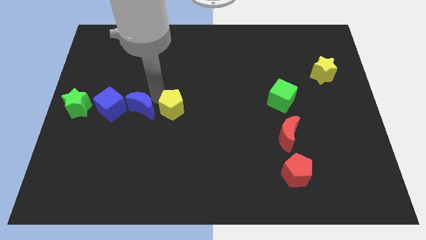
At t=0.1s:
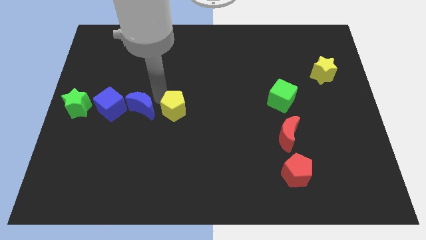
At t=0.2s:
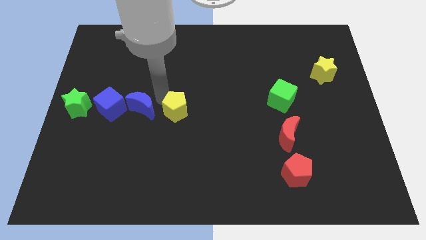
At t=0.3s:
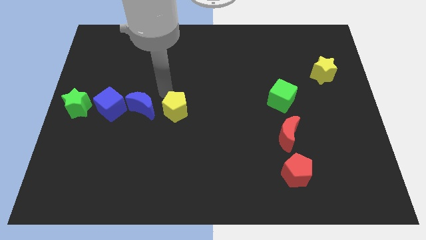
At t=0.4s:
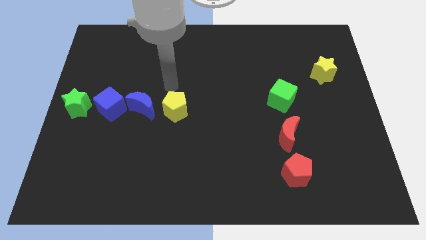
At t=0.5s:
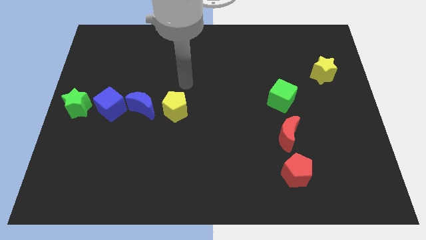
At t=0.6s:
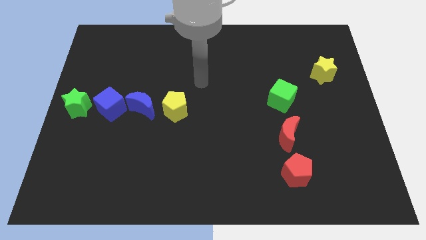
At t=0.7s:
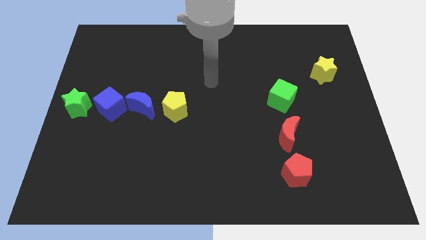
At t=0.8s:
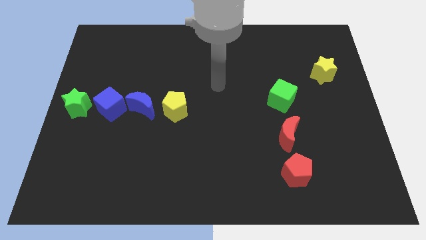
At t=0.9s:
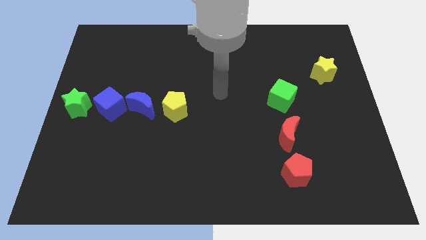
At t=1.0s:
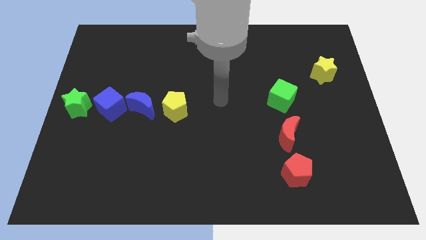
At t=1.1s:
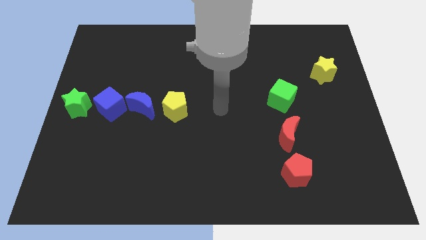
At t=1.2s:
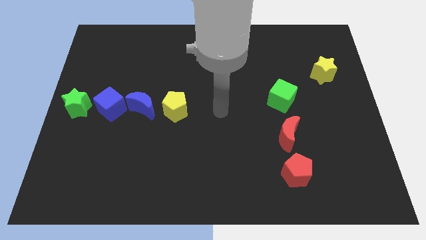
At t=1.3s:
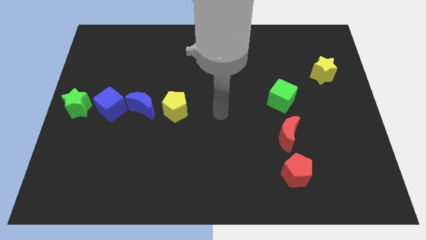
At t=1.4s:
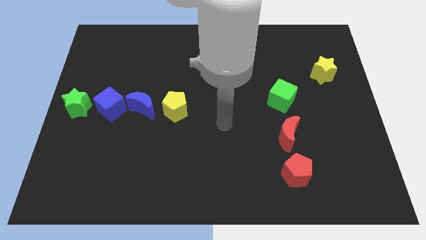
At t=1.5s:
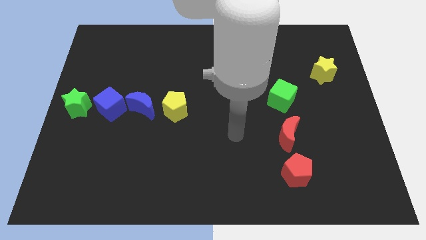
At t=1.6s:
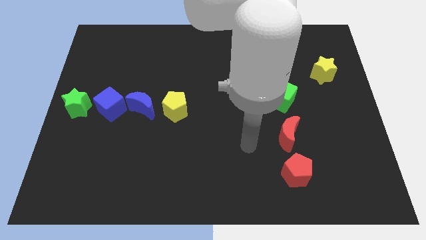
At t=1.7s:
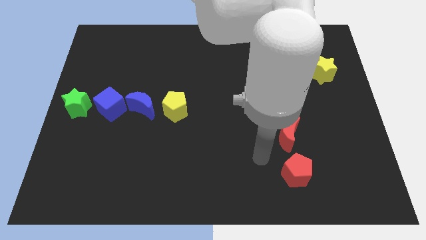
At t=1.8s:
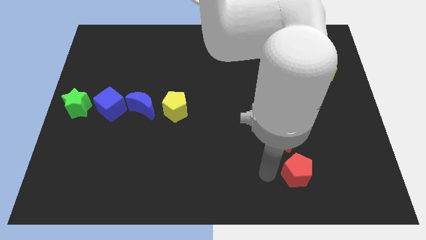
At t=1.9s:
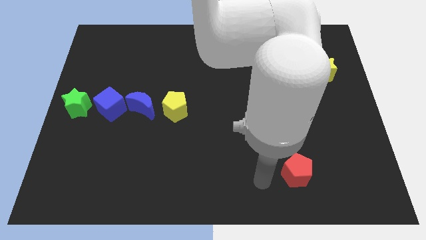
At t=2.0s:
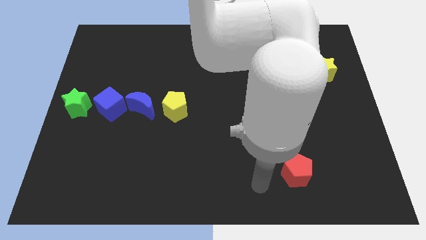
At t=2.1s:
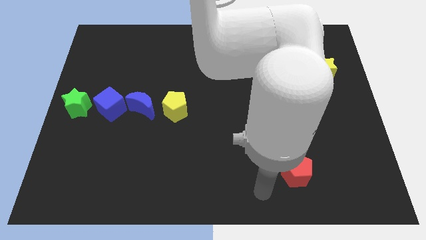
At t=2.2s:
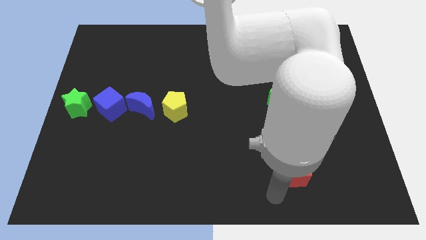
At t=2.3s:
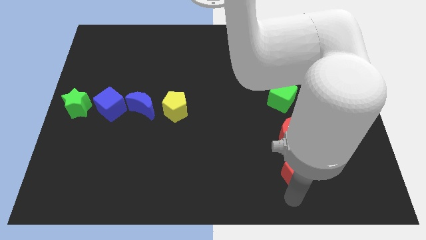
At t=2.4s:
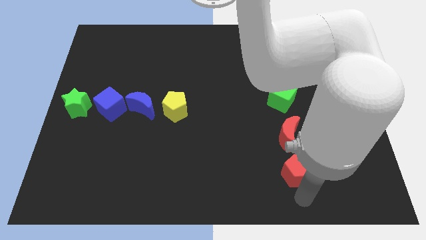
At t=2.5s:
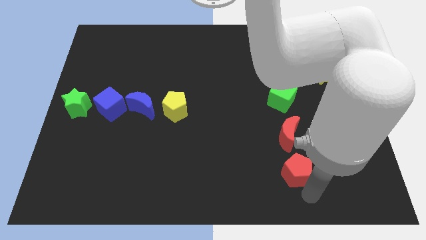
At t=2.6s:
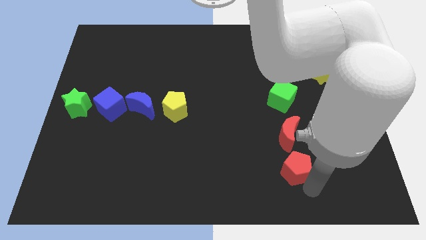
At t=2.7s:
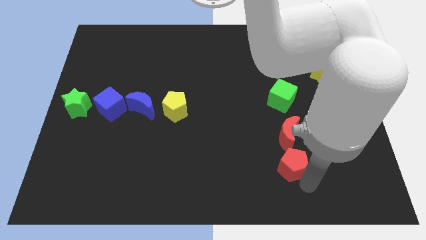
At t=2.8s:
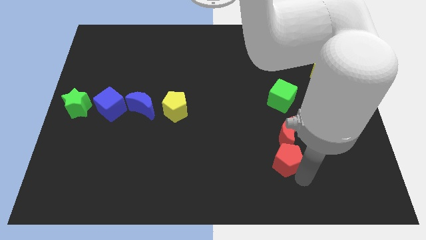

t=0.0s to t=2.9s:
go away from the yellow pentagon

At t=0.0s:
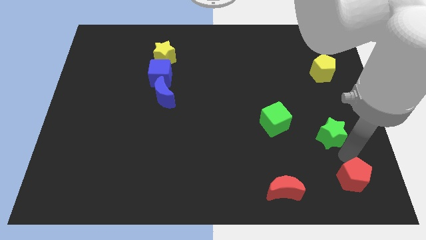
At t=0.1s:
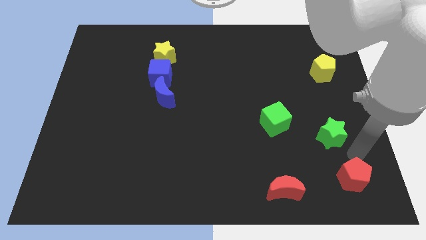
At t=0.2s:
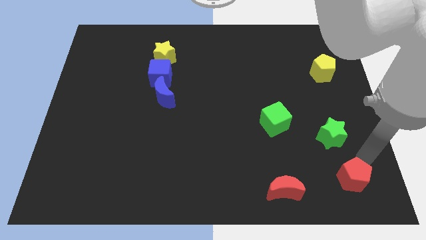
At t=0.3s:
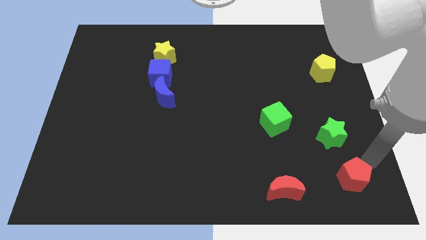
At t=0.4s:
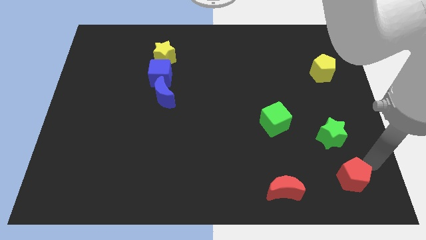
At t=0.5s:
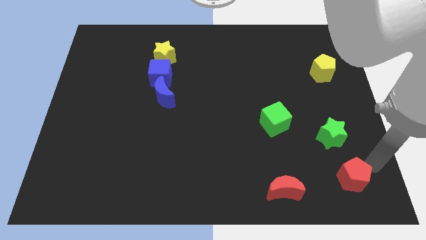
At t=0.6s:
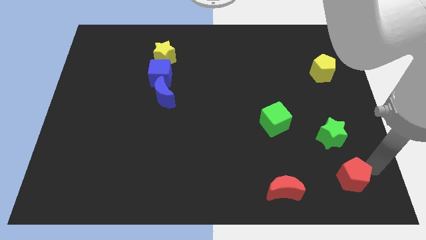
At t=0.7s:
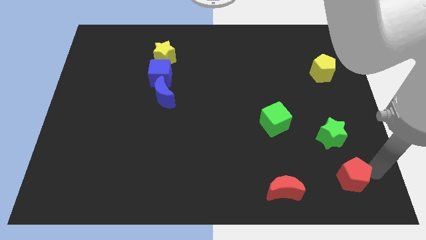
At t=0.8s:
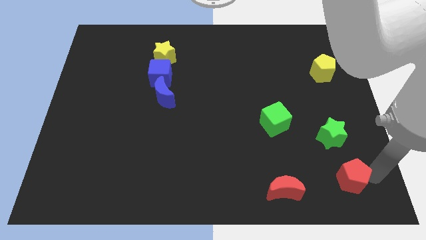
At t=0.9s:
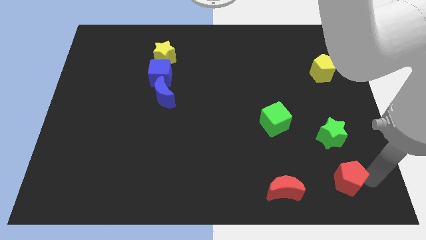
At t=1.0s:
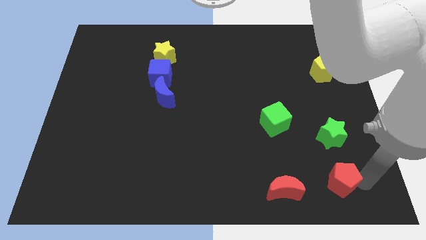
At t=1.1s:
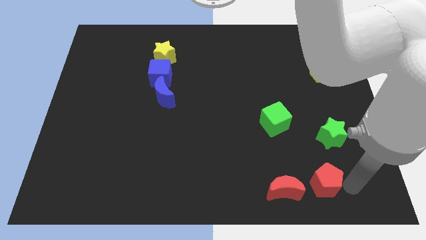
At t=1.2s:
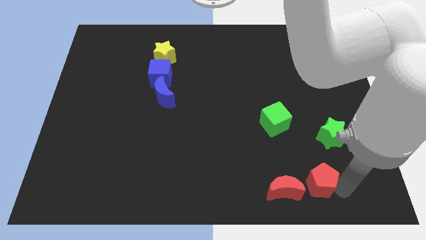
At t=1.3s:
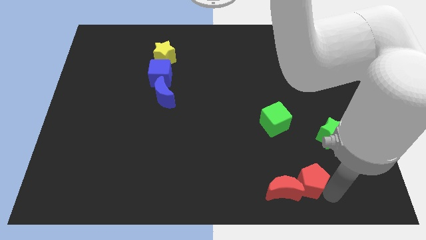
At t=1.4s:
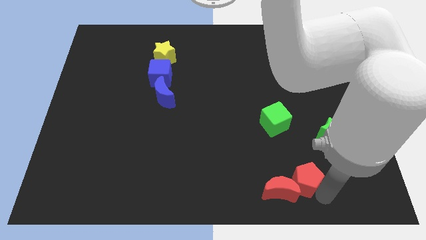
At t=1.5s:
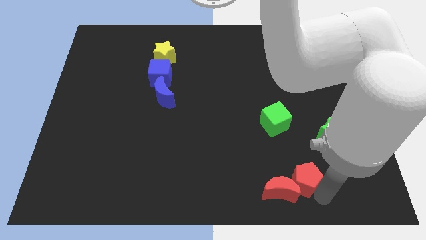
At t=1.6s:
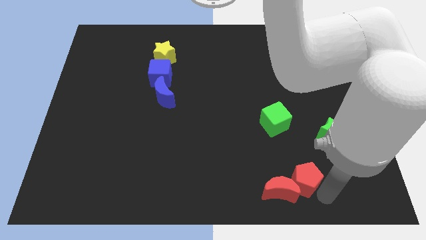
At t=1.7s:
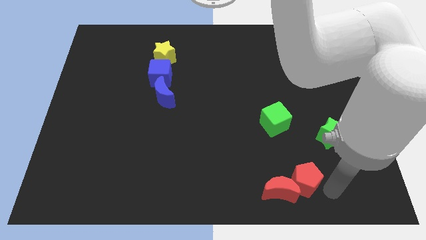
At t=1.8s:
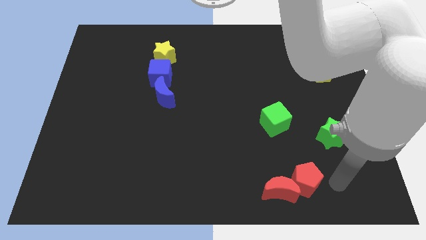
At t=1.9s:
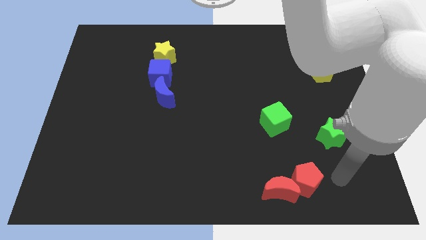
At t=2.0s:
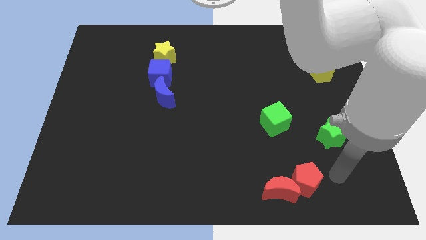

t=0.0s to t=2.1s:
push red pentagon close to red moon

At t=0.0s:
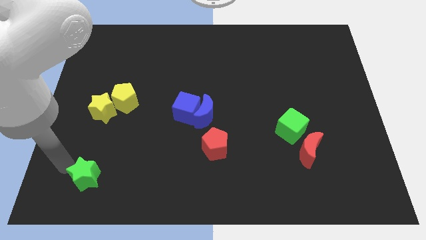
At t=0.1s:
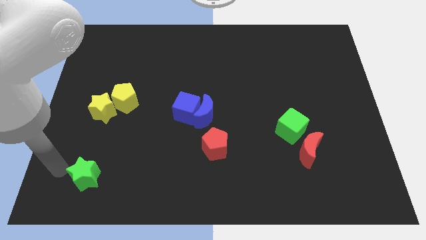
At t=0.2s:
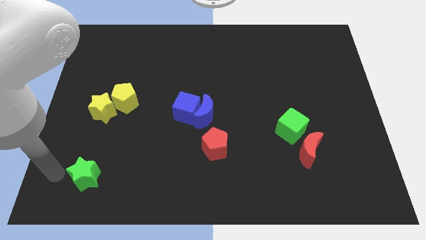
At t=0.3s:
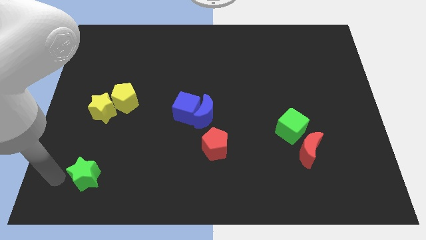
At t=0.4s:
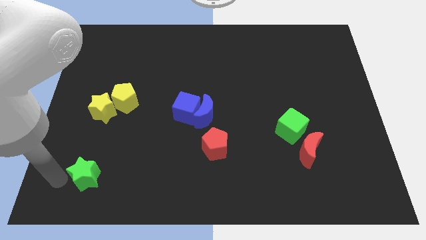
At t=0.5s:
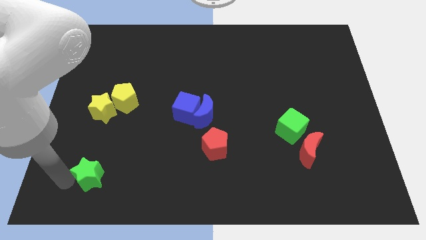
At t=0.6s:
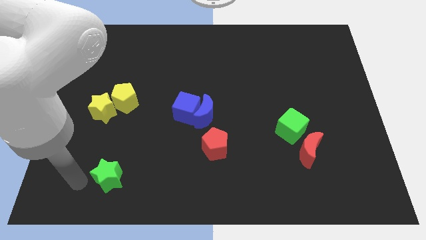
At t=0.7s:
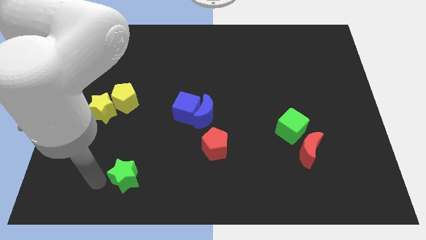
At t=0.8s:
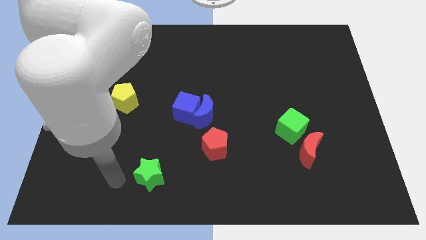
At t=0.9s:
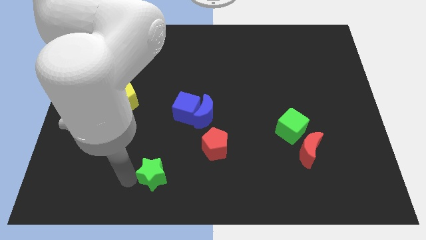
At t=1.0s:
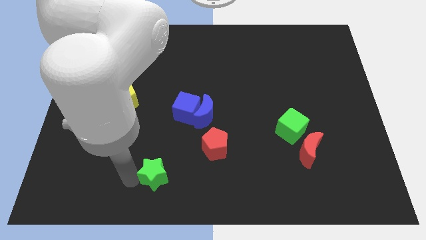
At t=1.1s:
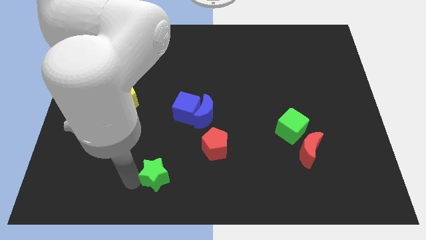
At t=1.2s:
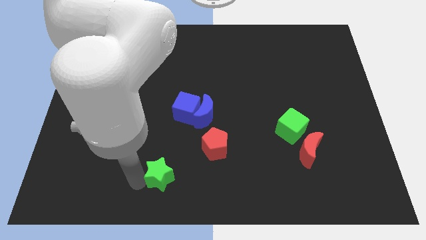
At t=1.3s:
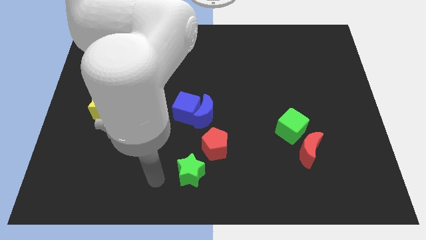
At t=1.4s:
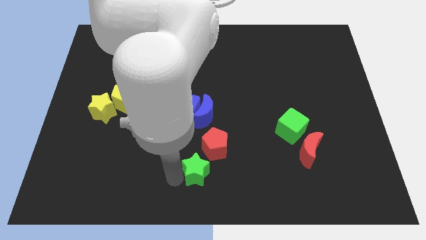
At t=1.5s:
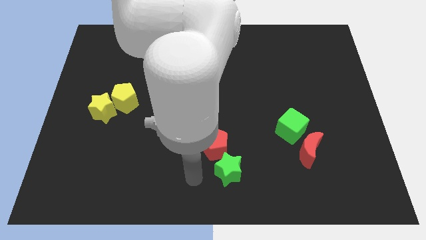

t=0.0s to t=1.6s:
slide the green star to the bottom left side of the red pentagon

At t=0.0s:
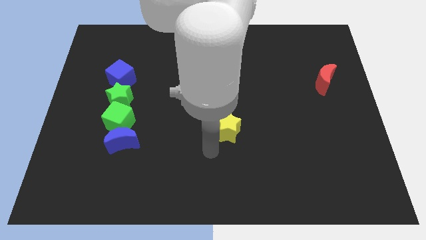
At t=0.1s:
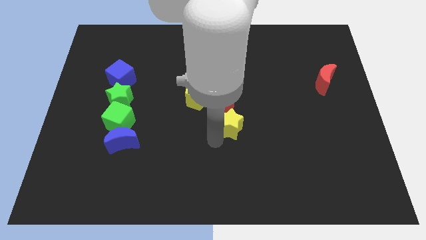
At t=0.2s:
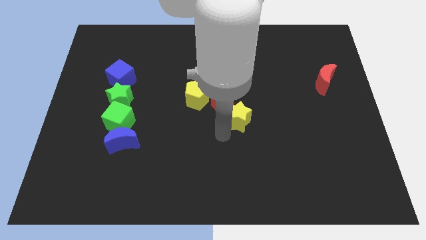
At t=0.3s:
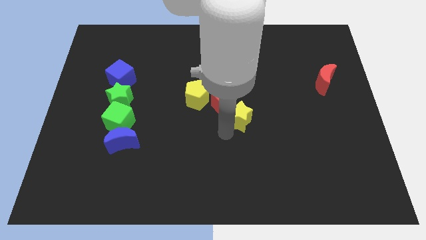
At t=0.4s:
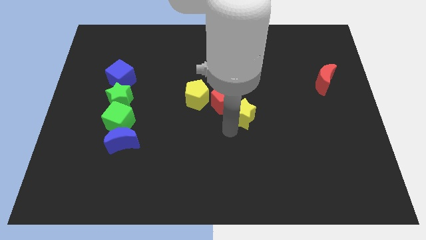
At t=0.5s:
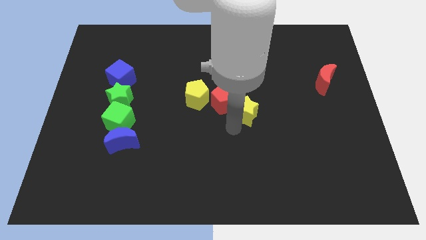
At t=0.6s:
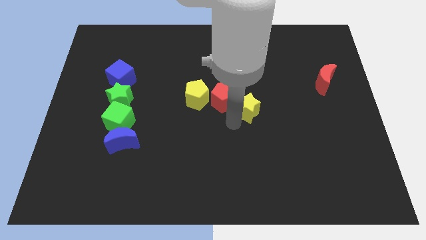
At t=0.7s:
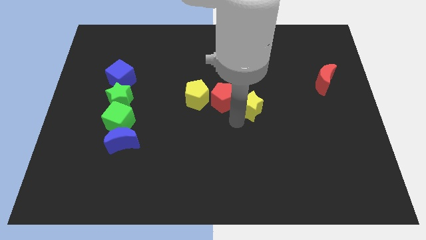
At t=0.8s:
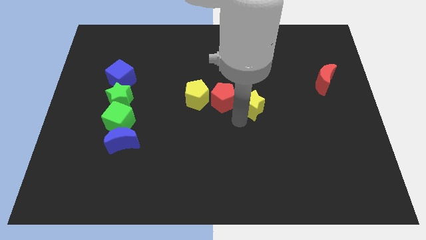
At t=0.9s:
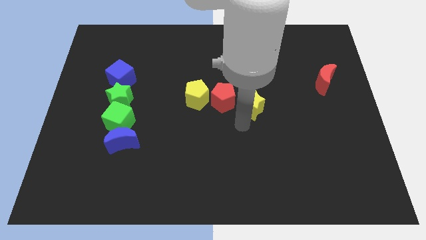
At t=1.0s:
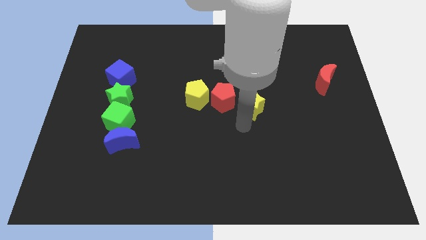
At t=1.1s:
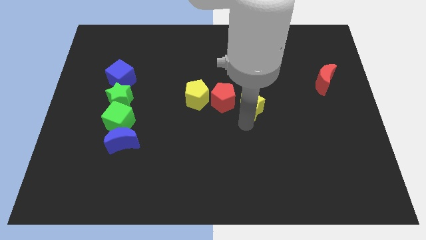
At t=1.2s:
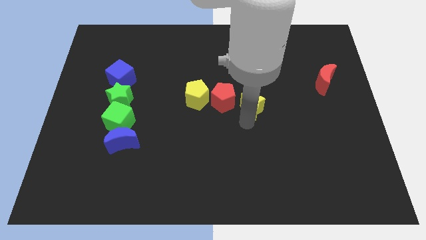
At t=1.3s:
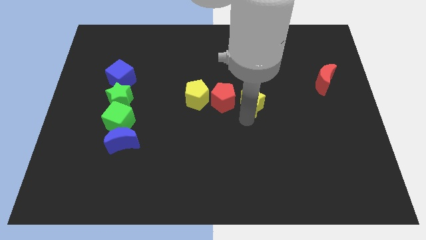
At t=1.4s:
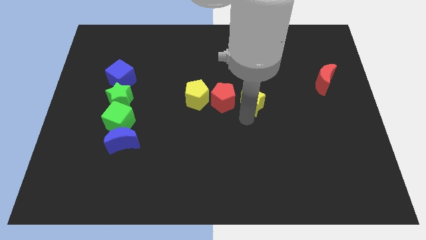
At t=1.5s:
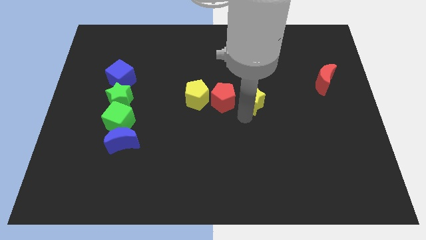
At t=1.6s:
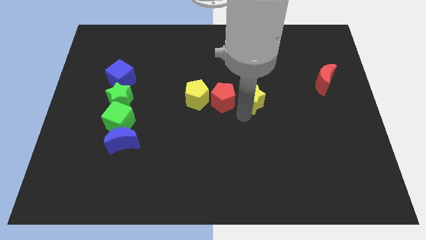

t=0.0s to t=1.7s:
put the yellow star on the right side of the red pentagon

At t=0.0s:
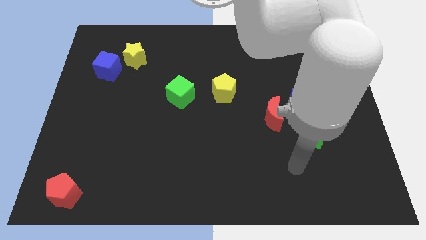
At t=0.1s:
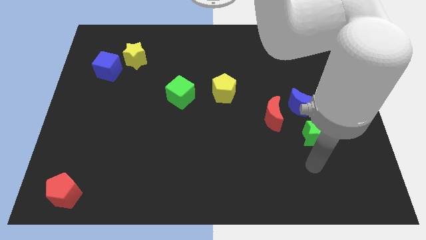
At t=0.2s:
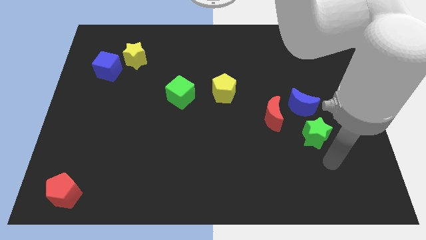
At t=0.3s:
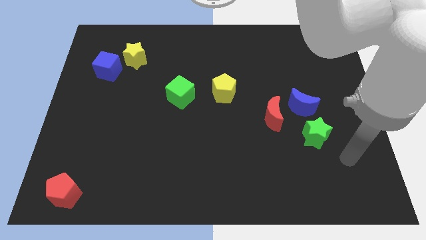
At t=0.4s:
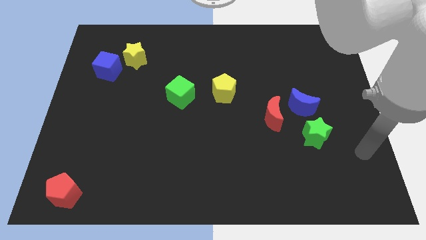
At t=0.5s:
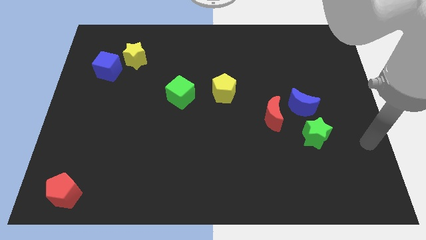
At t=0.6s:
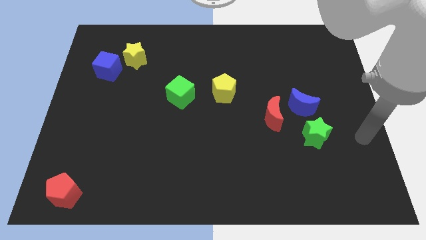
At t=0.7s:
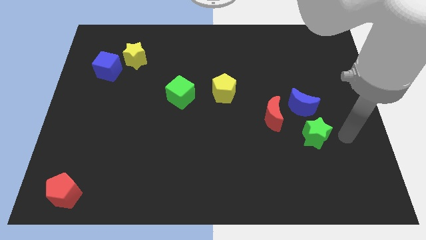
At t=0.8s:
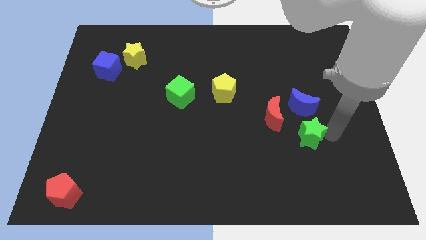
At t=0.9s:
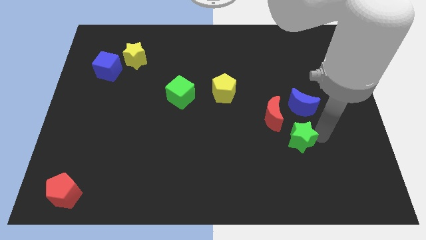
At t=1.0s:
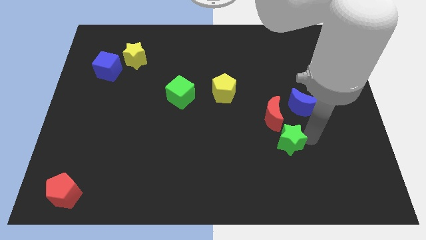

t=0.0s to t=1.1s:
move the green star close to the bottom side of the red moon
